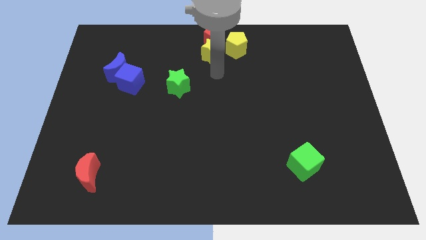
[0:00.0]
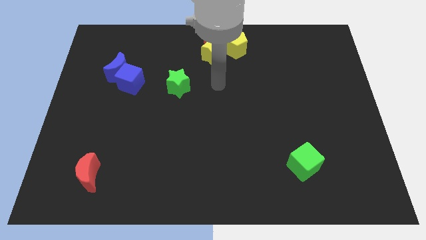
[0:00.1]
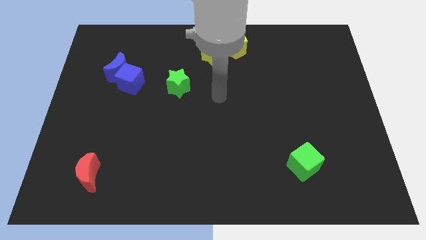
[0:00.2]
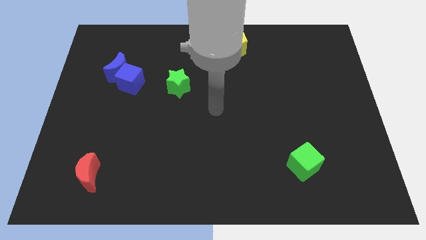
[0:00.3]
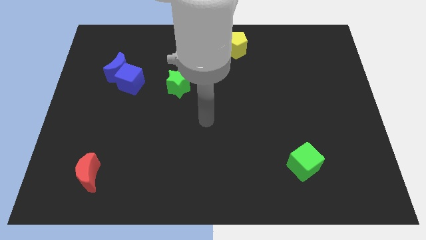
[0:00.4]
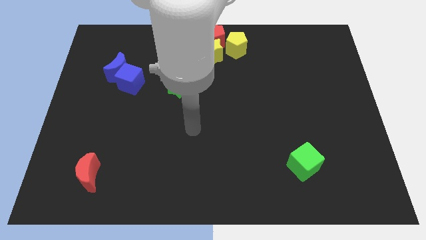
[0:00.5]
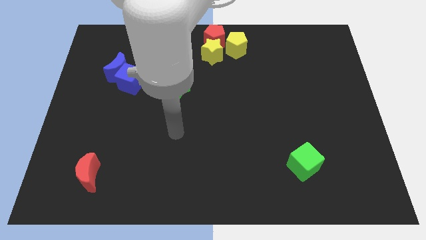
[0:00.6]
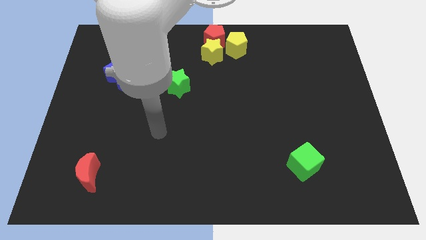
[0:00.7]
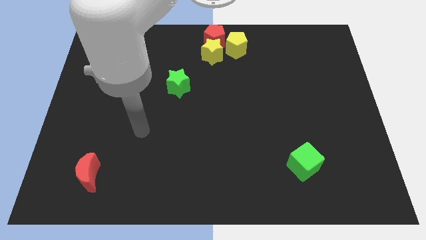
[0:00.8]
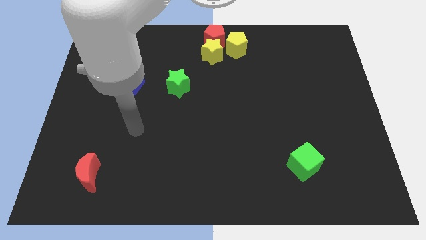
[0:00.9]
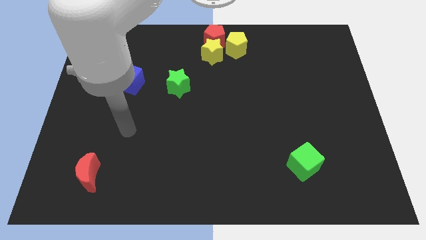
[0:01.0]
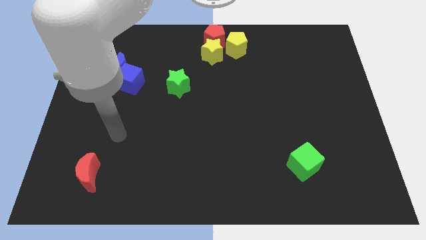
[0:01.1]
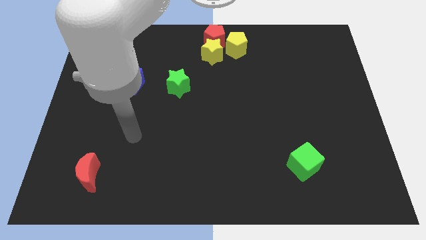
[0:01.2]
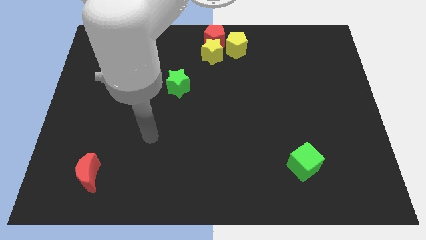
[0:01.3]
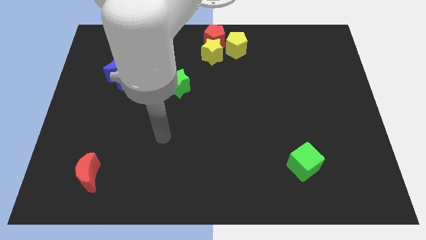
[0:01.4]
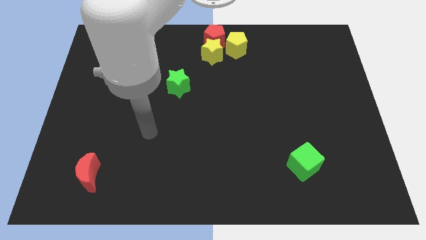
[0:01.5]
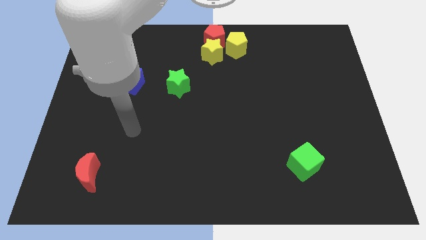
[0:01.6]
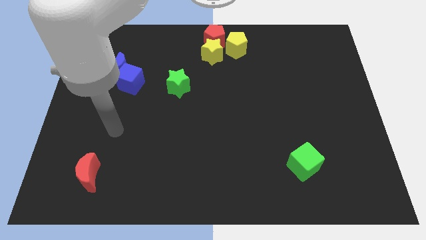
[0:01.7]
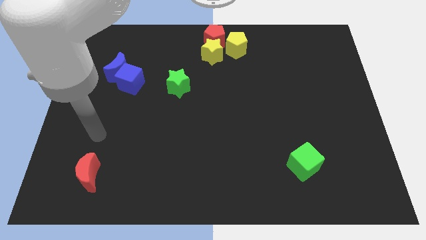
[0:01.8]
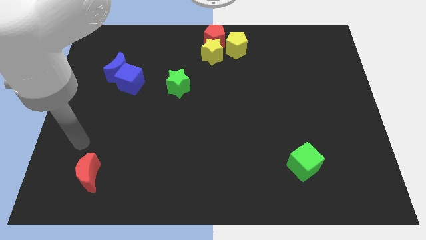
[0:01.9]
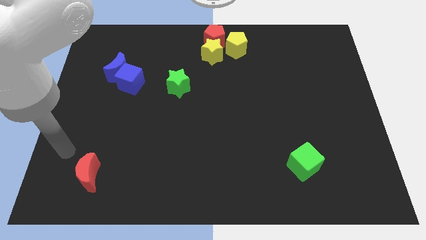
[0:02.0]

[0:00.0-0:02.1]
place your hand on top of the red crescent

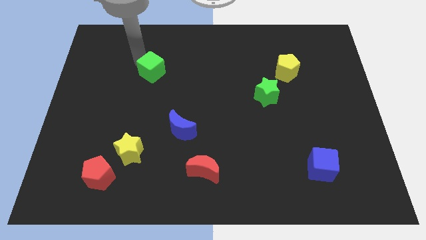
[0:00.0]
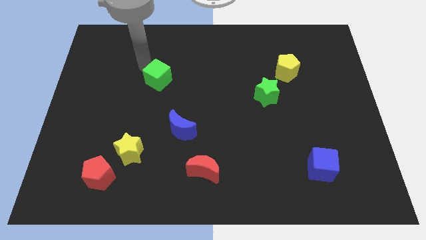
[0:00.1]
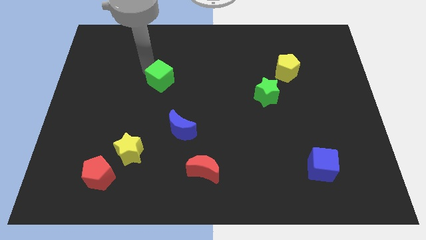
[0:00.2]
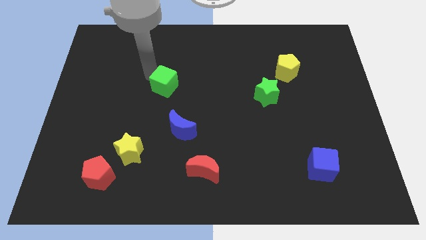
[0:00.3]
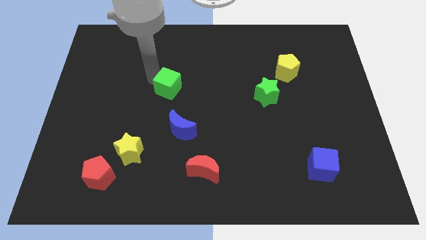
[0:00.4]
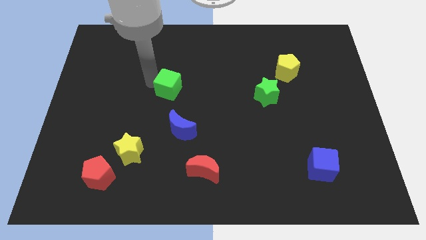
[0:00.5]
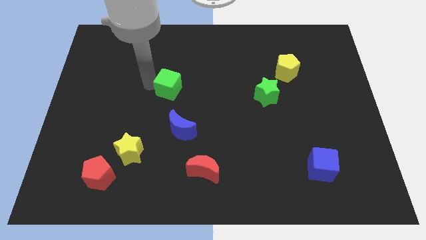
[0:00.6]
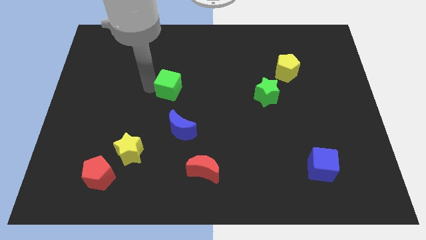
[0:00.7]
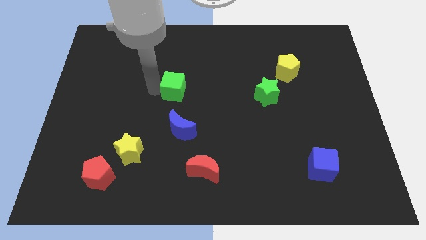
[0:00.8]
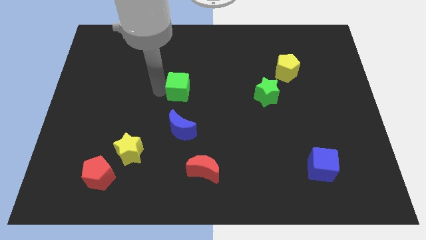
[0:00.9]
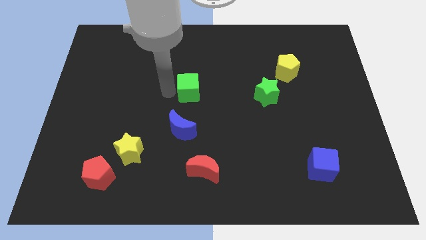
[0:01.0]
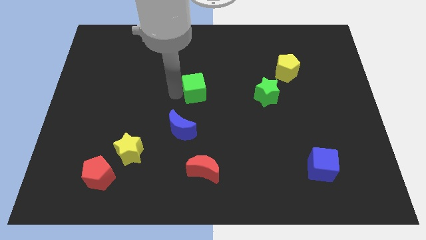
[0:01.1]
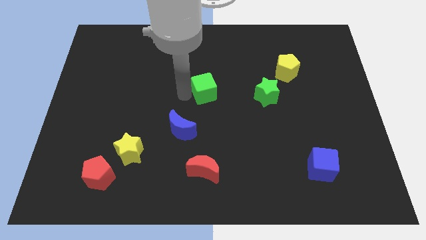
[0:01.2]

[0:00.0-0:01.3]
place green star at center

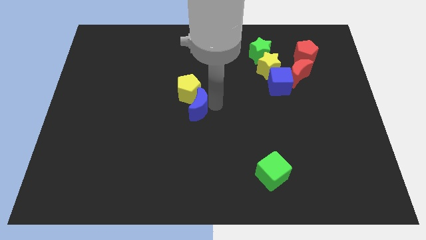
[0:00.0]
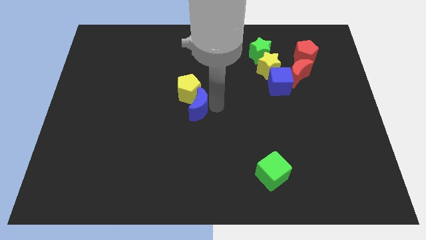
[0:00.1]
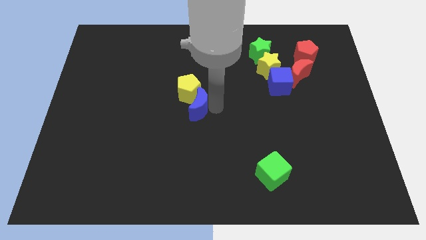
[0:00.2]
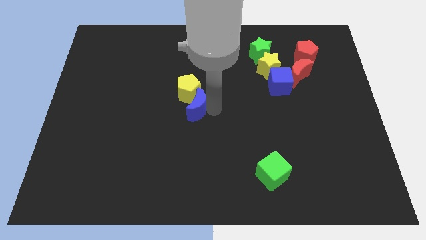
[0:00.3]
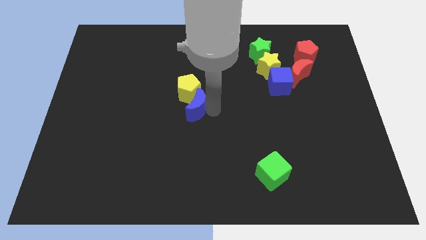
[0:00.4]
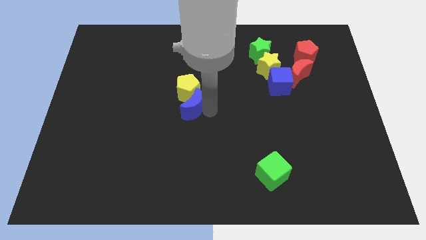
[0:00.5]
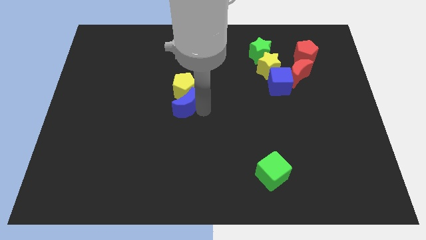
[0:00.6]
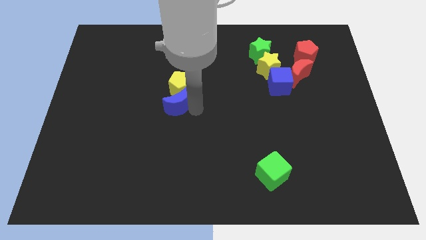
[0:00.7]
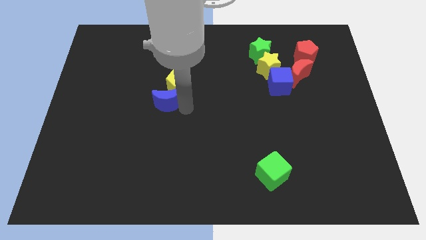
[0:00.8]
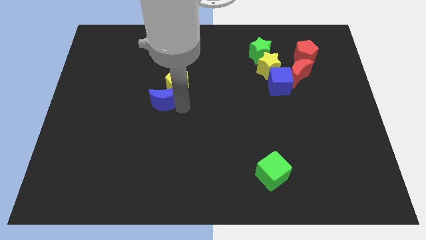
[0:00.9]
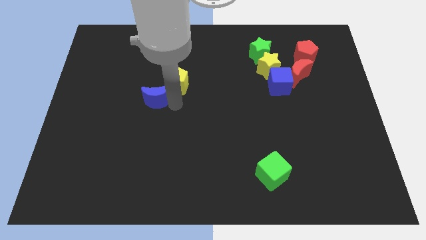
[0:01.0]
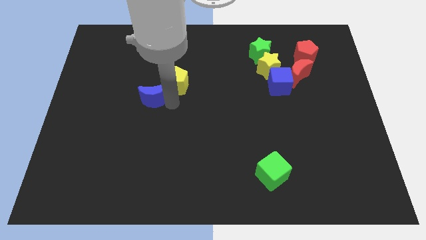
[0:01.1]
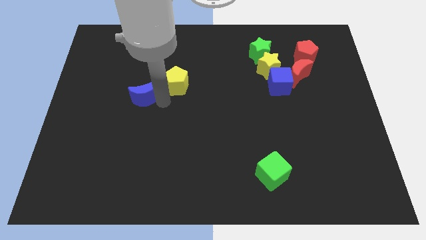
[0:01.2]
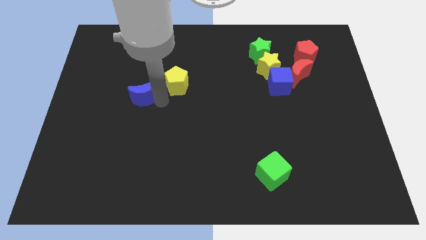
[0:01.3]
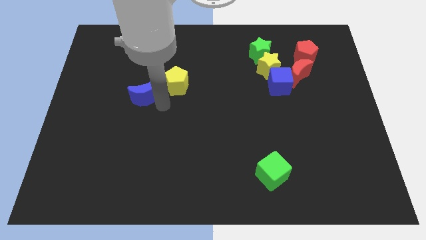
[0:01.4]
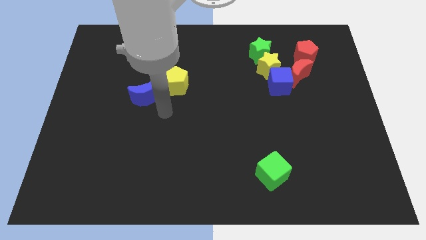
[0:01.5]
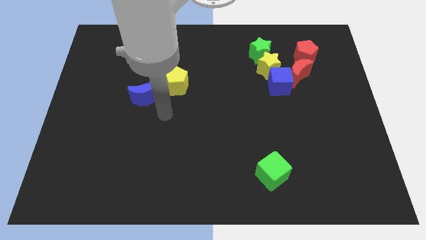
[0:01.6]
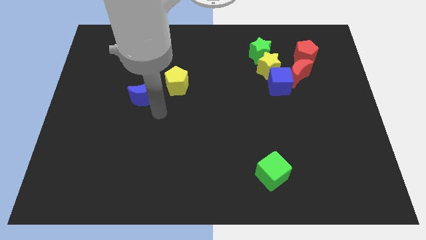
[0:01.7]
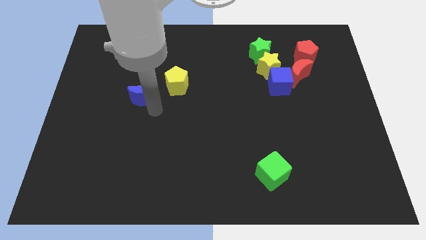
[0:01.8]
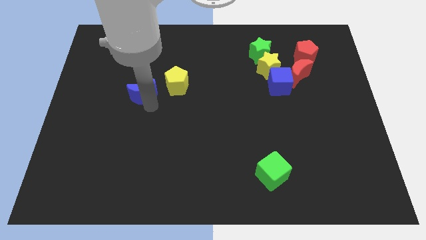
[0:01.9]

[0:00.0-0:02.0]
move the blue crescent to the left of the yellow pentagon

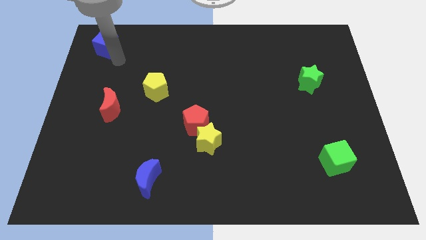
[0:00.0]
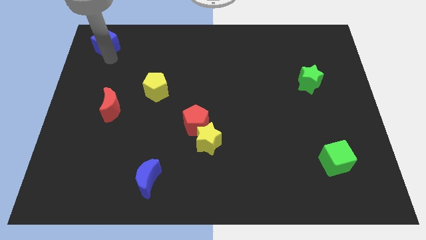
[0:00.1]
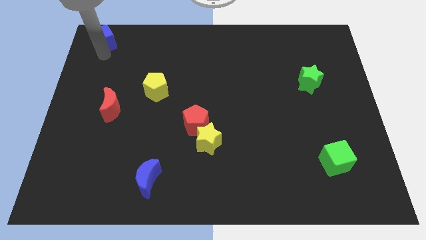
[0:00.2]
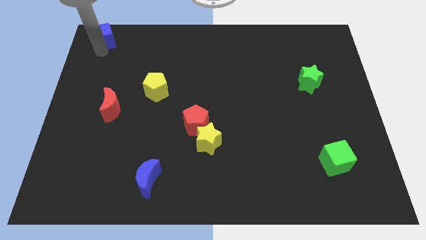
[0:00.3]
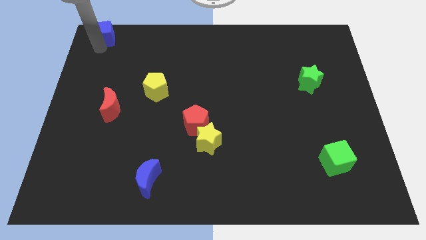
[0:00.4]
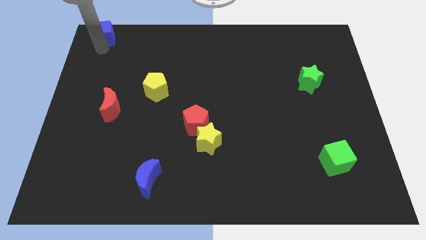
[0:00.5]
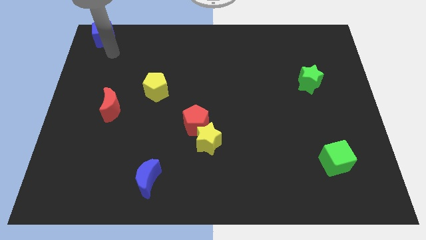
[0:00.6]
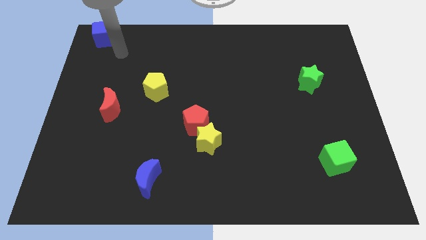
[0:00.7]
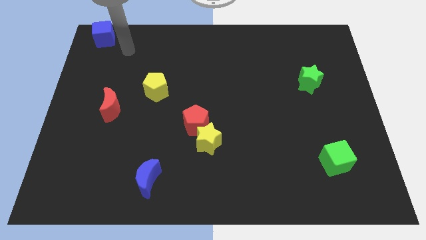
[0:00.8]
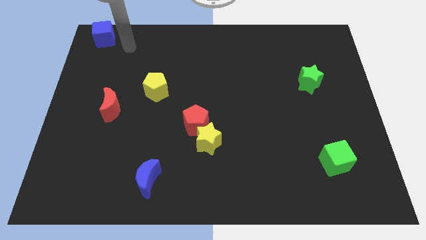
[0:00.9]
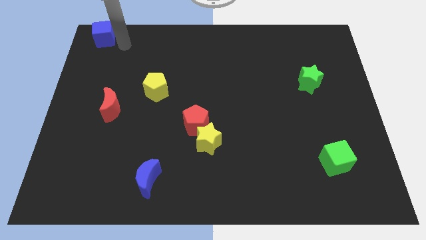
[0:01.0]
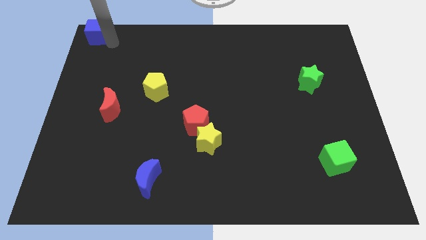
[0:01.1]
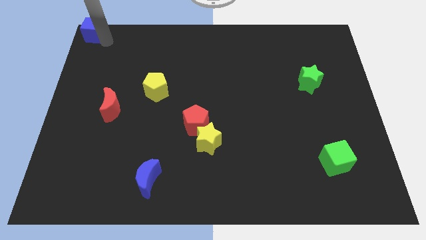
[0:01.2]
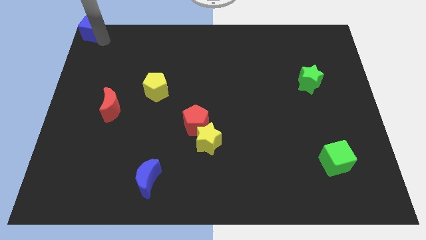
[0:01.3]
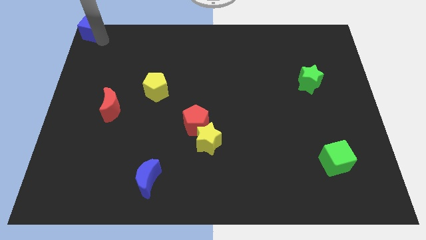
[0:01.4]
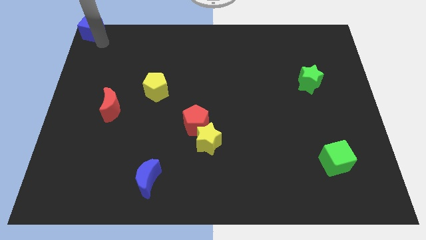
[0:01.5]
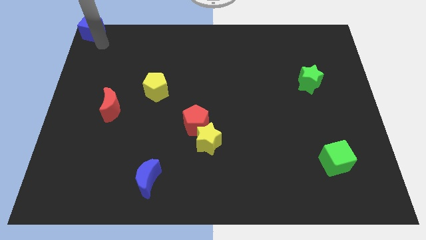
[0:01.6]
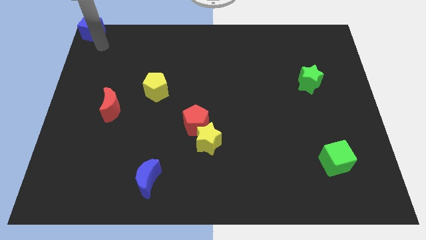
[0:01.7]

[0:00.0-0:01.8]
place the blue cube at the top left corner of the board

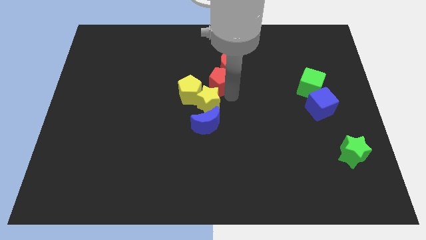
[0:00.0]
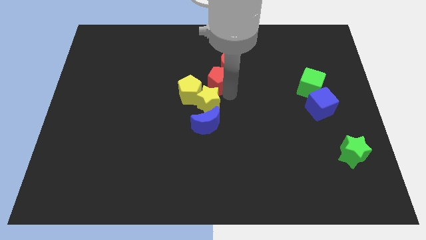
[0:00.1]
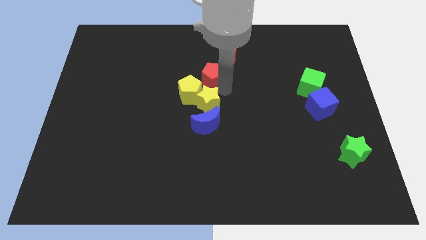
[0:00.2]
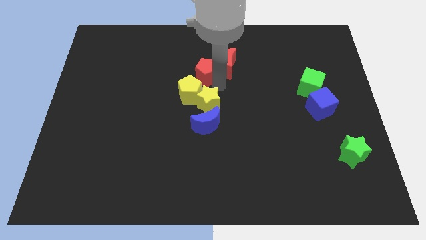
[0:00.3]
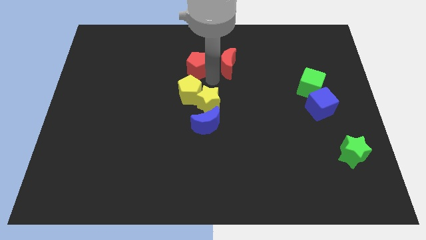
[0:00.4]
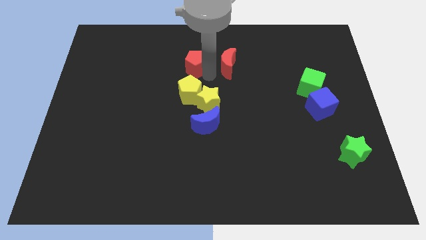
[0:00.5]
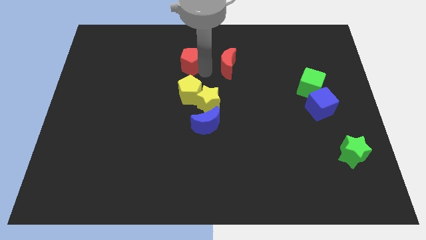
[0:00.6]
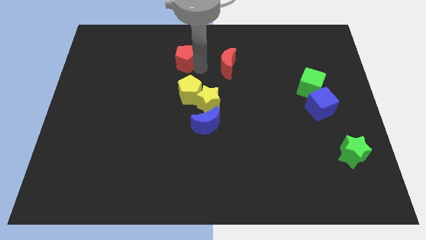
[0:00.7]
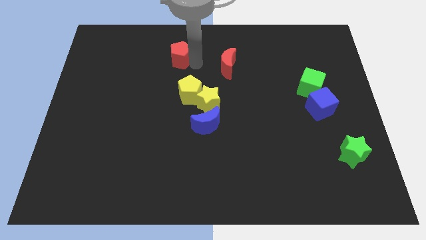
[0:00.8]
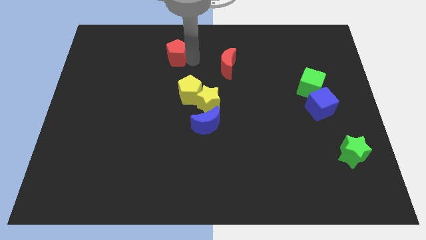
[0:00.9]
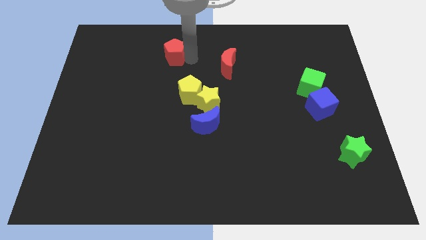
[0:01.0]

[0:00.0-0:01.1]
slide red pentagon towards up left

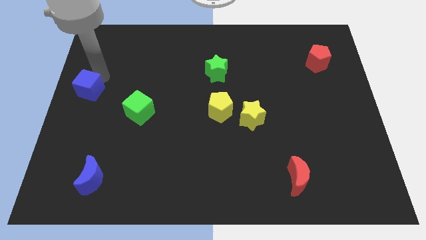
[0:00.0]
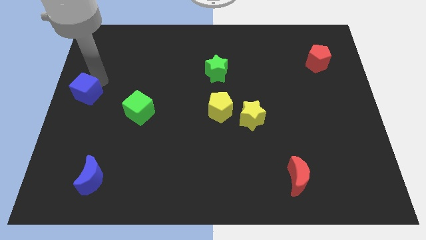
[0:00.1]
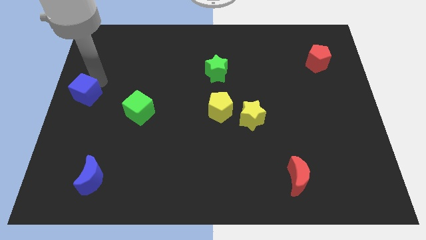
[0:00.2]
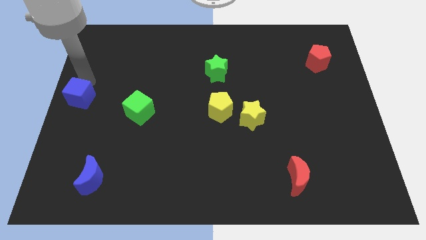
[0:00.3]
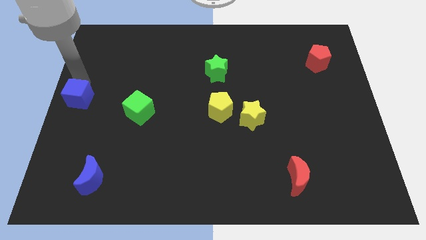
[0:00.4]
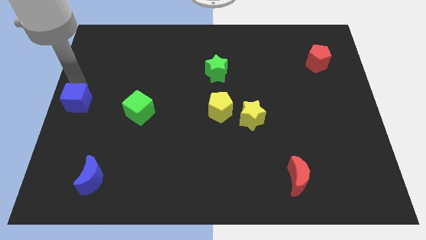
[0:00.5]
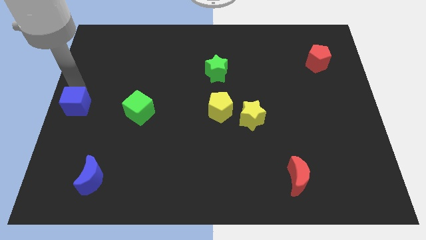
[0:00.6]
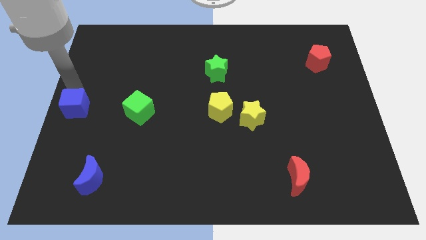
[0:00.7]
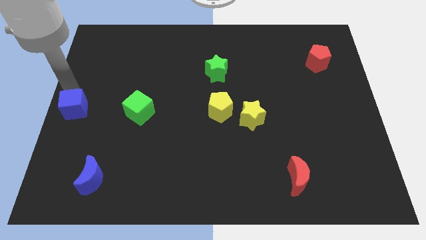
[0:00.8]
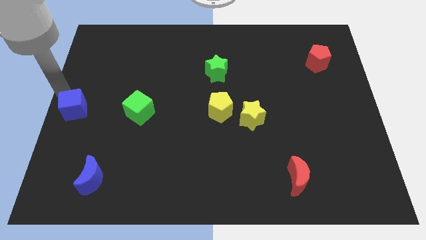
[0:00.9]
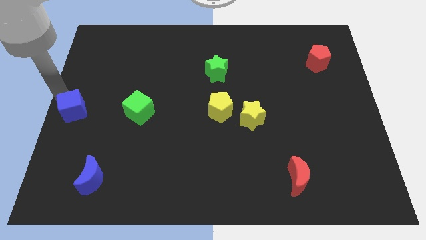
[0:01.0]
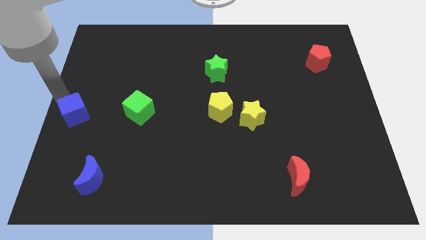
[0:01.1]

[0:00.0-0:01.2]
place the blue cube parallel to green cube
